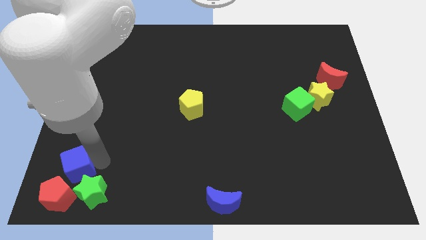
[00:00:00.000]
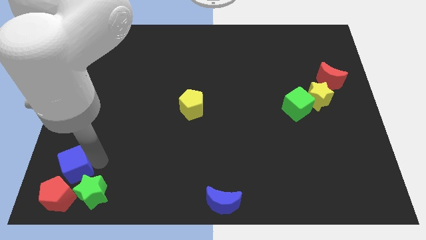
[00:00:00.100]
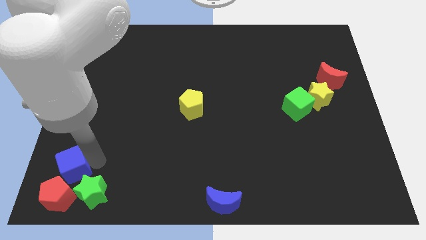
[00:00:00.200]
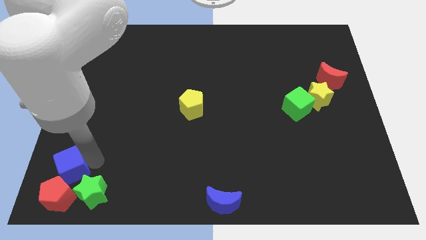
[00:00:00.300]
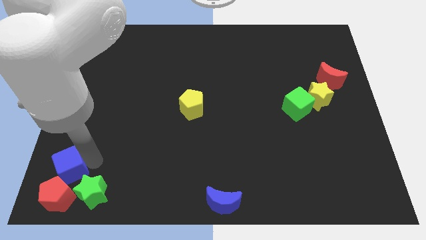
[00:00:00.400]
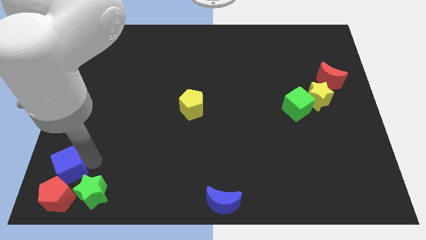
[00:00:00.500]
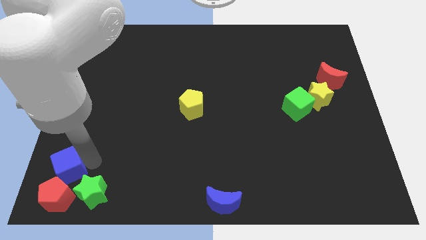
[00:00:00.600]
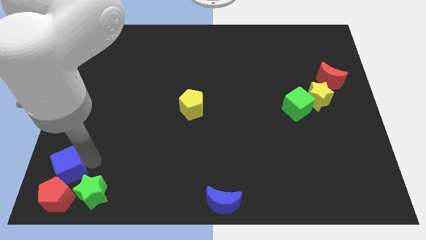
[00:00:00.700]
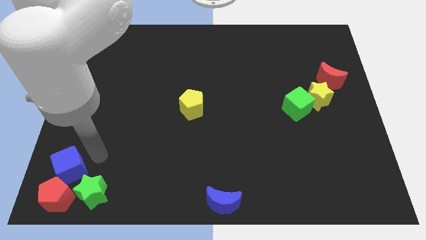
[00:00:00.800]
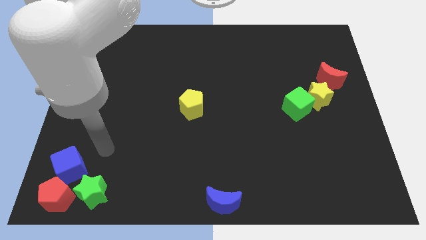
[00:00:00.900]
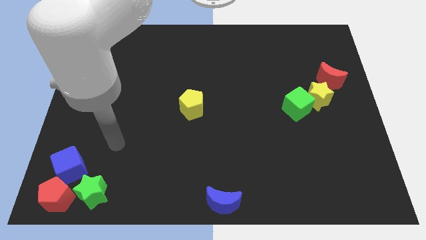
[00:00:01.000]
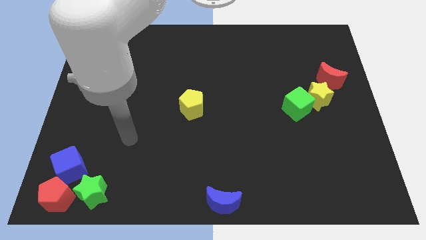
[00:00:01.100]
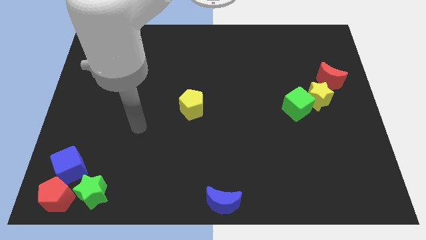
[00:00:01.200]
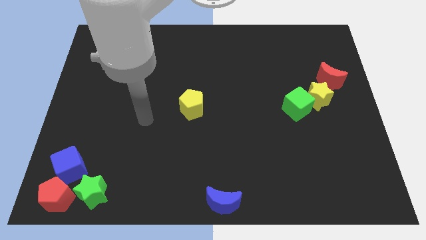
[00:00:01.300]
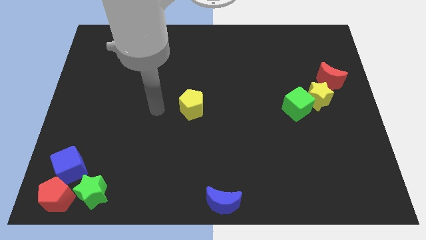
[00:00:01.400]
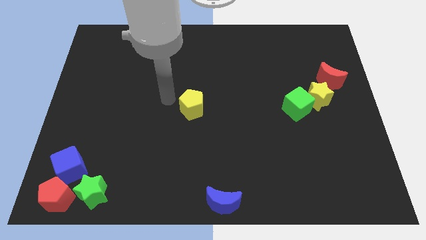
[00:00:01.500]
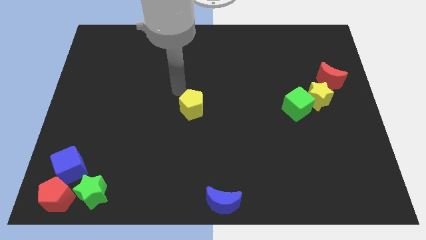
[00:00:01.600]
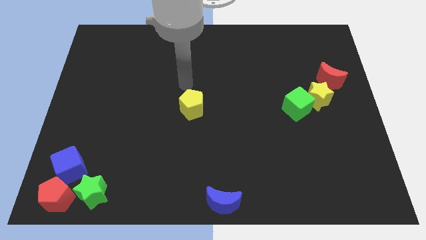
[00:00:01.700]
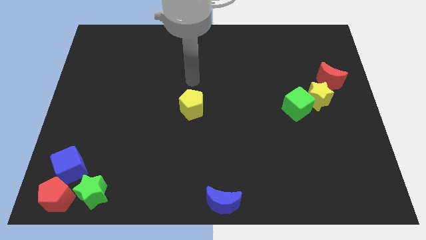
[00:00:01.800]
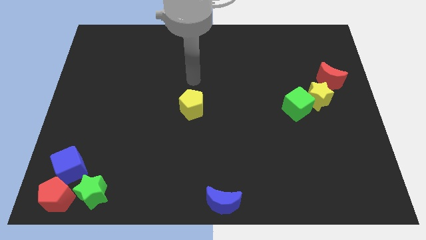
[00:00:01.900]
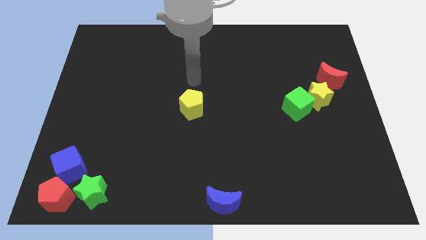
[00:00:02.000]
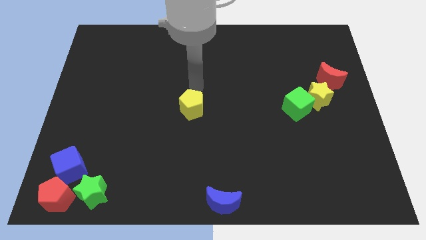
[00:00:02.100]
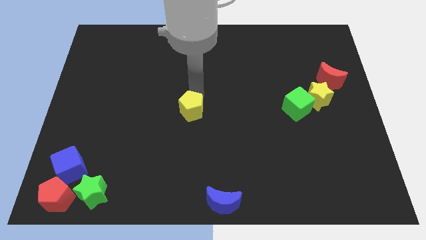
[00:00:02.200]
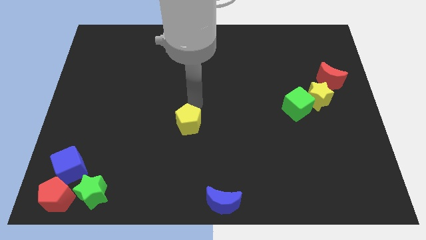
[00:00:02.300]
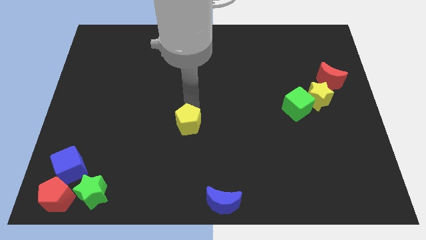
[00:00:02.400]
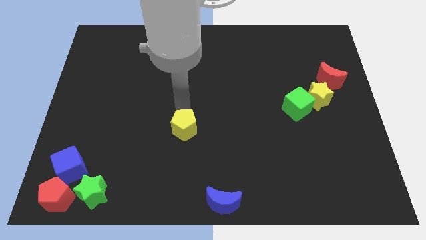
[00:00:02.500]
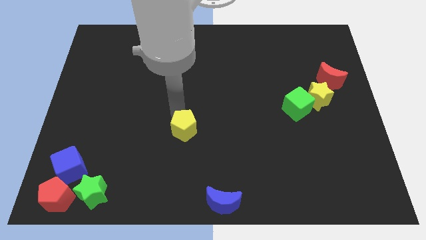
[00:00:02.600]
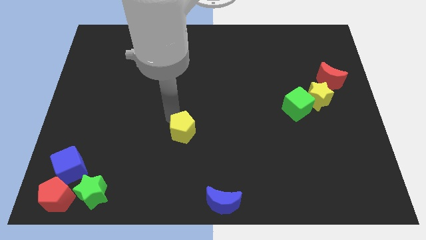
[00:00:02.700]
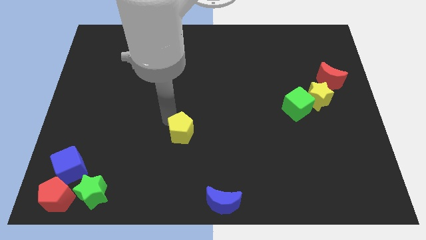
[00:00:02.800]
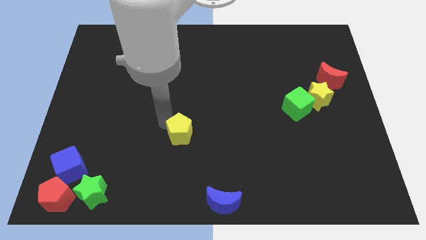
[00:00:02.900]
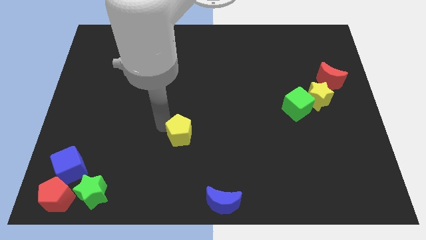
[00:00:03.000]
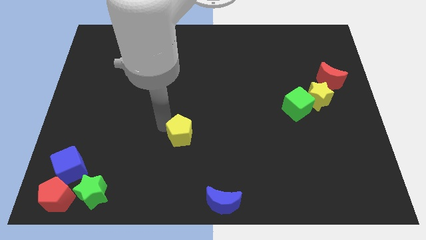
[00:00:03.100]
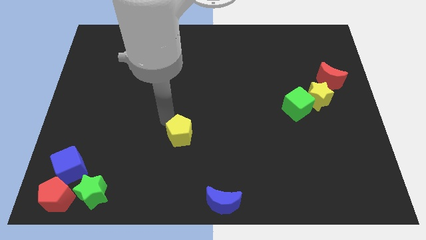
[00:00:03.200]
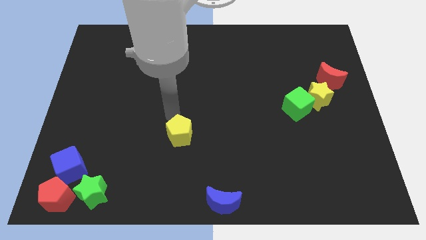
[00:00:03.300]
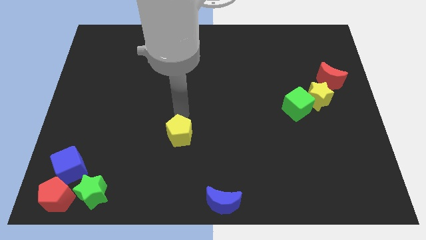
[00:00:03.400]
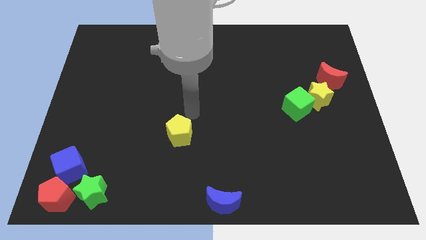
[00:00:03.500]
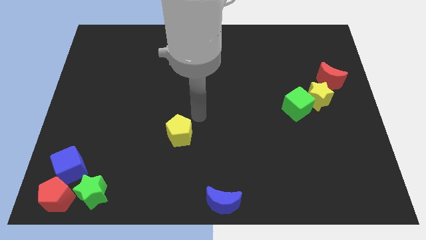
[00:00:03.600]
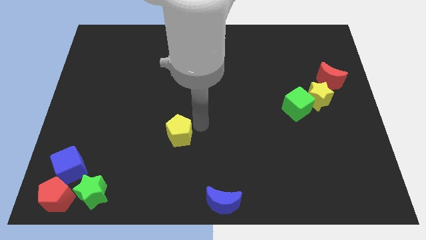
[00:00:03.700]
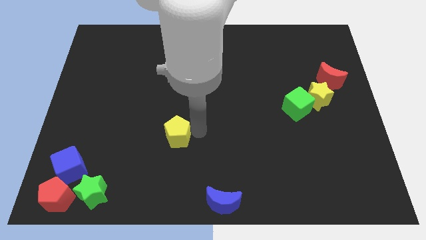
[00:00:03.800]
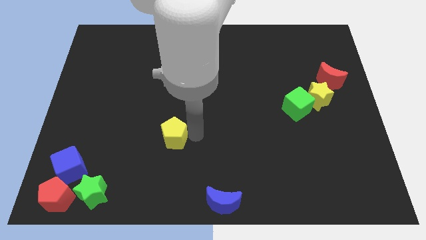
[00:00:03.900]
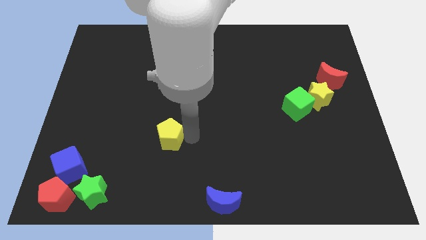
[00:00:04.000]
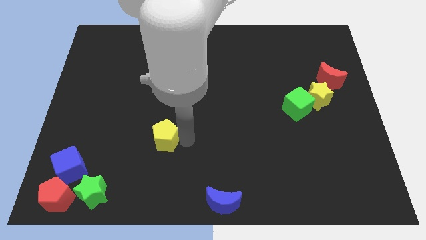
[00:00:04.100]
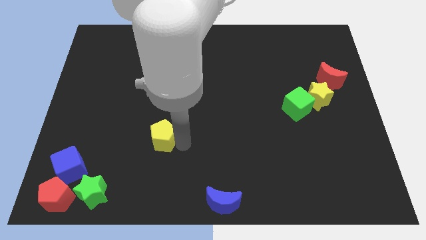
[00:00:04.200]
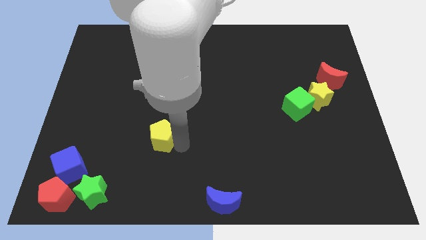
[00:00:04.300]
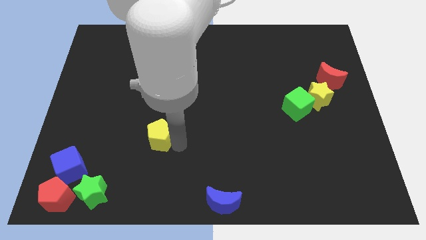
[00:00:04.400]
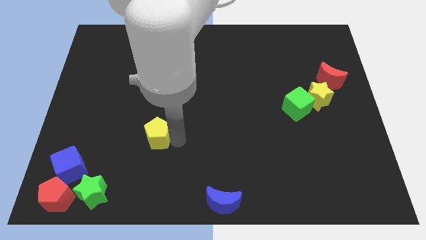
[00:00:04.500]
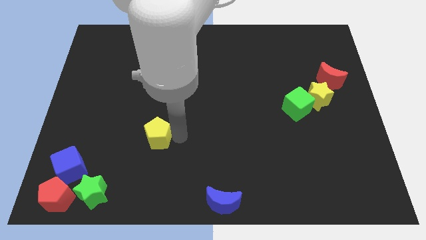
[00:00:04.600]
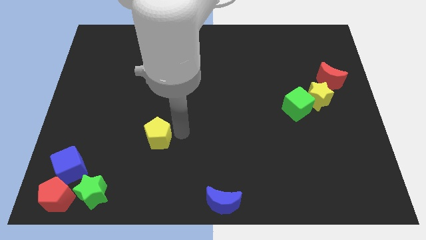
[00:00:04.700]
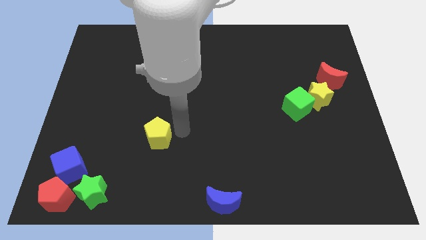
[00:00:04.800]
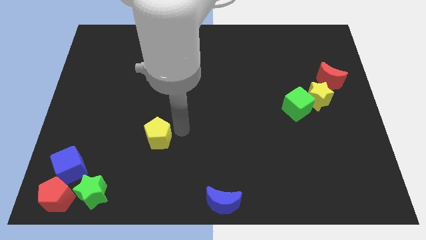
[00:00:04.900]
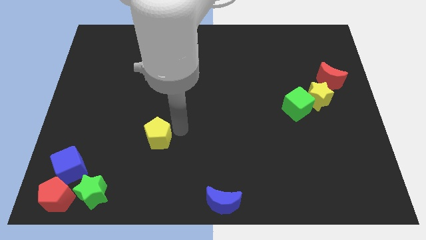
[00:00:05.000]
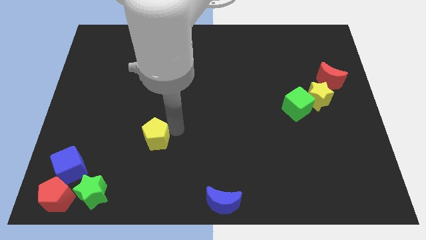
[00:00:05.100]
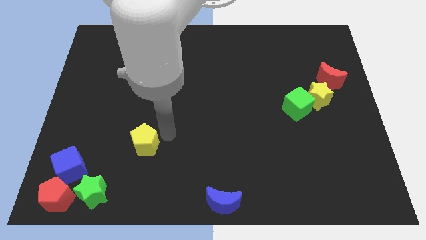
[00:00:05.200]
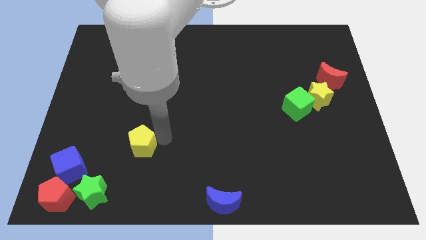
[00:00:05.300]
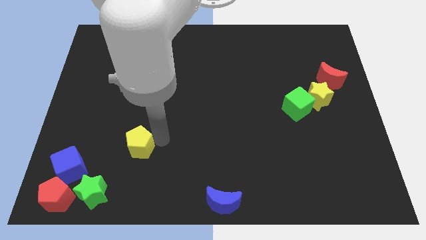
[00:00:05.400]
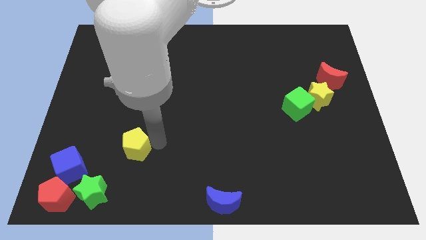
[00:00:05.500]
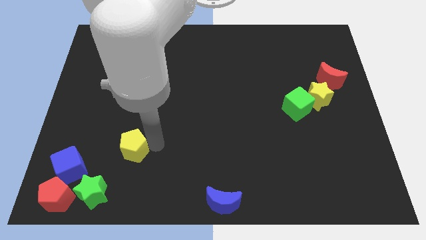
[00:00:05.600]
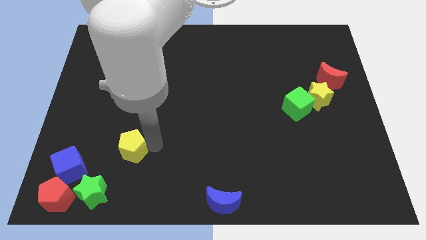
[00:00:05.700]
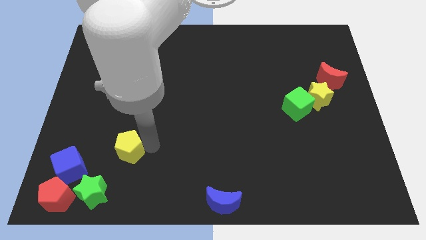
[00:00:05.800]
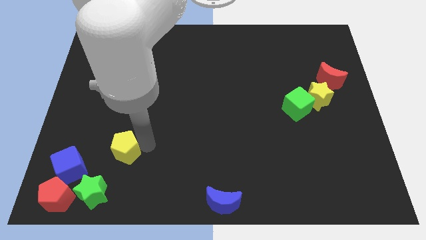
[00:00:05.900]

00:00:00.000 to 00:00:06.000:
move yellow pentagon towards blue cube

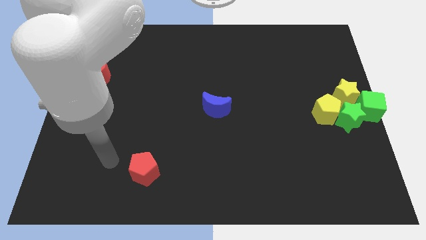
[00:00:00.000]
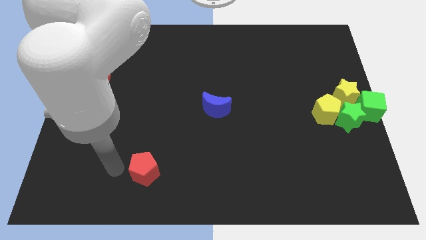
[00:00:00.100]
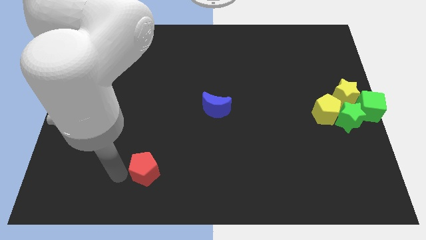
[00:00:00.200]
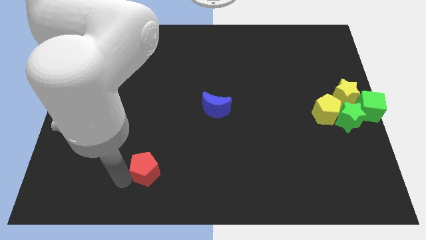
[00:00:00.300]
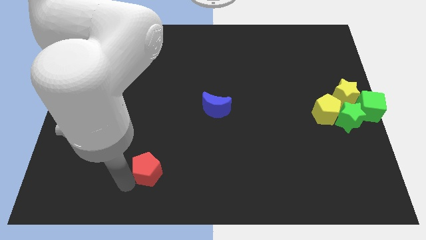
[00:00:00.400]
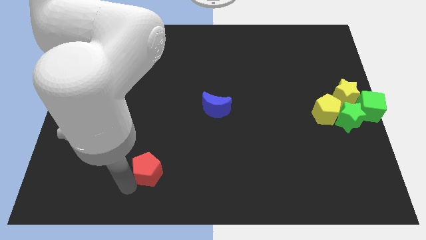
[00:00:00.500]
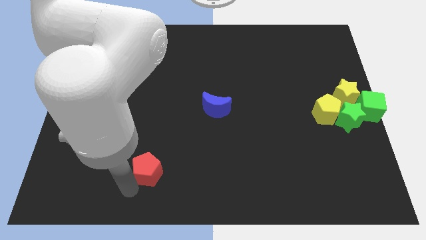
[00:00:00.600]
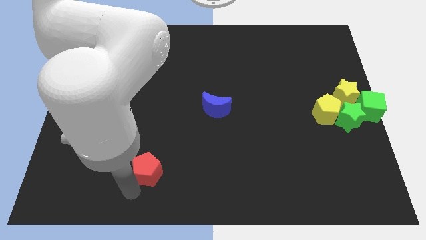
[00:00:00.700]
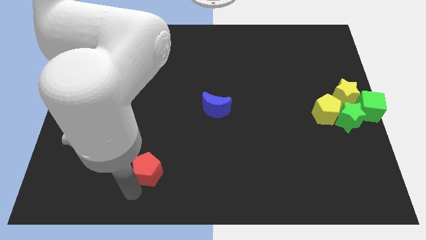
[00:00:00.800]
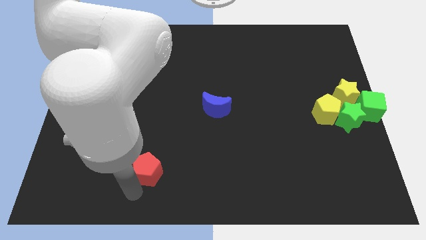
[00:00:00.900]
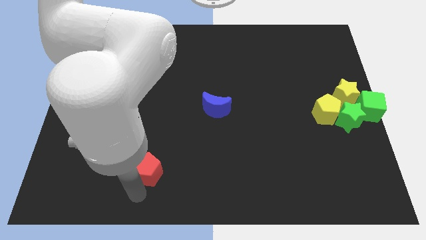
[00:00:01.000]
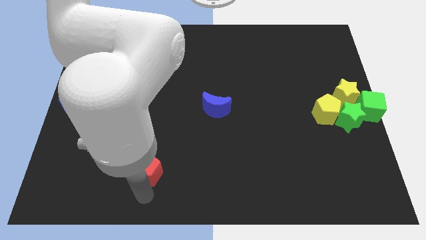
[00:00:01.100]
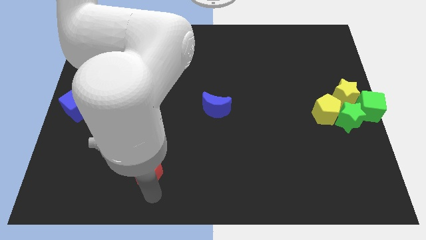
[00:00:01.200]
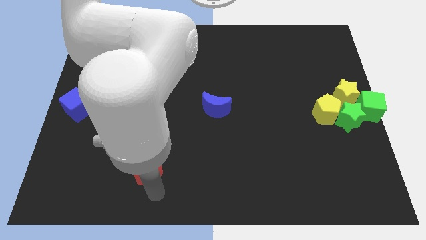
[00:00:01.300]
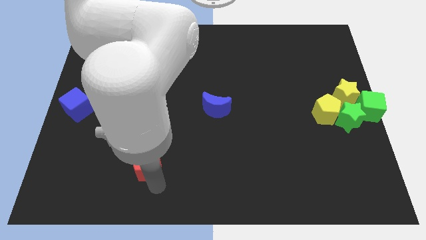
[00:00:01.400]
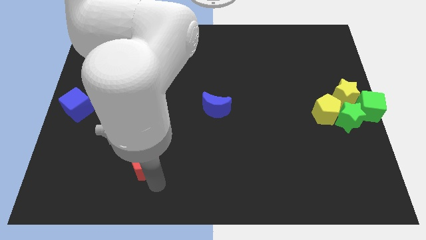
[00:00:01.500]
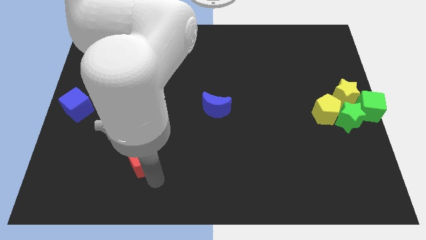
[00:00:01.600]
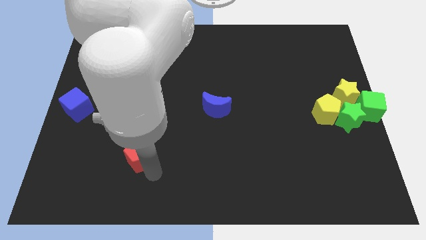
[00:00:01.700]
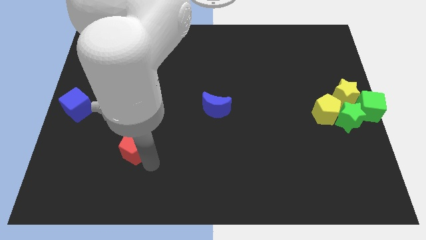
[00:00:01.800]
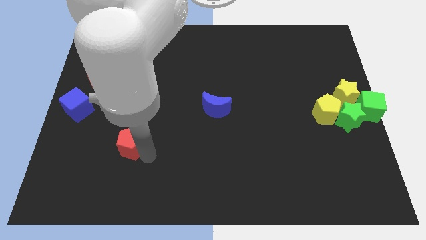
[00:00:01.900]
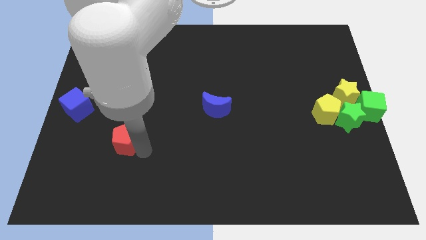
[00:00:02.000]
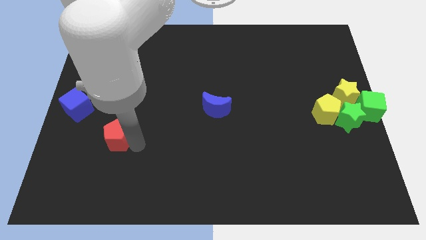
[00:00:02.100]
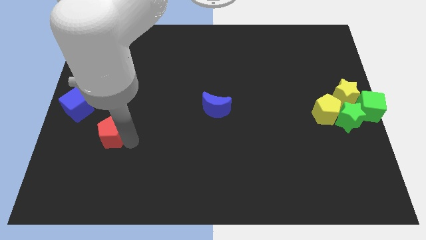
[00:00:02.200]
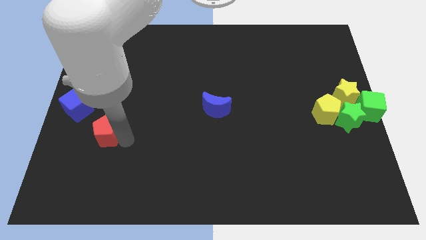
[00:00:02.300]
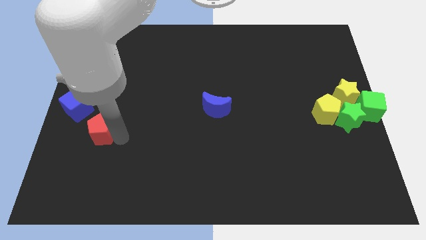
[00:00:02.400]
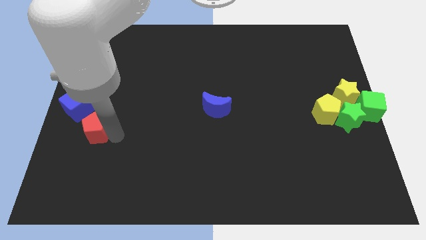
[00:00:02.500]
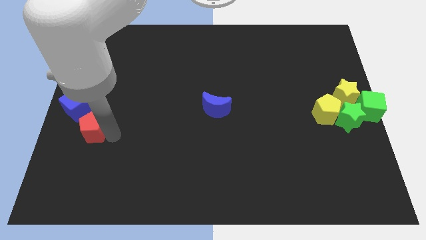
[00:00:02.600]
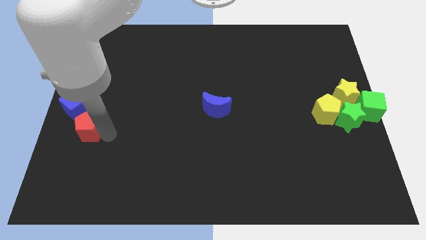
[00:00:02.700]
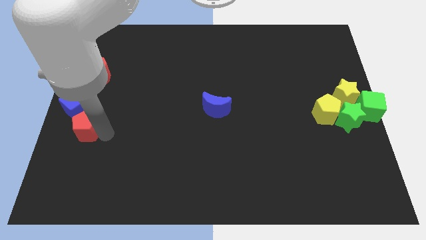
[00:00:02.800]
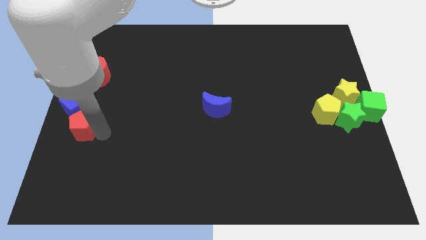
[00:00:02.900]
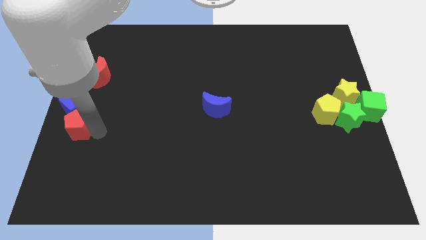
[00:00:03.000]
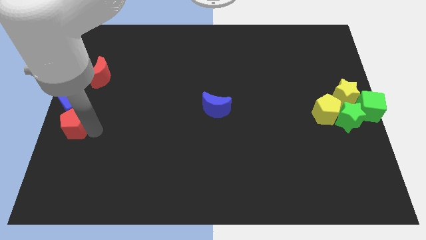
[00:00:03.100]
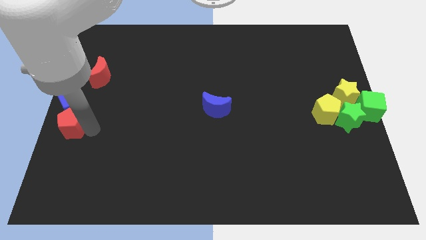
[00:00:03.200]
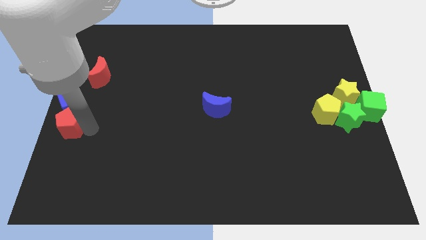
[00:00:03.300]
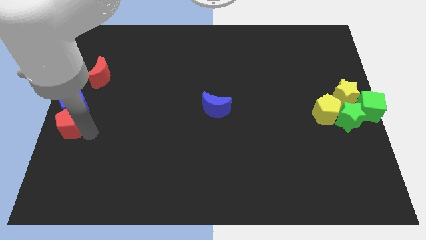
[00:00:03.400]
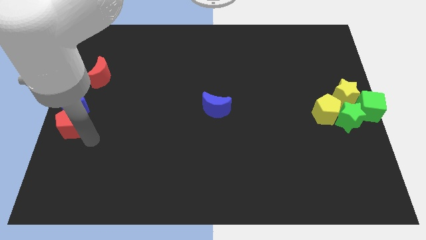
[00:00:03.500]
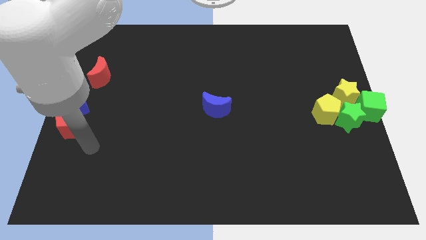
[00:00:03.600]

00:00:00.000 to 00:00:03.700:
push the red pentagon towards the bottom of the blue cube
